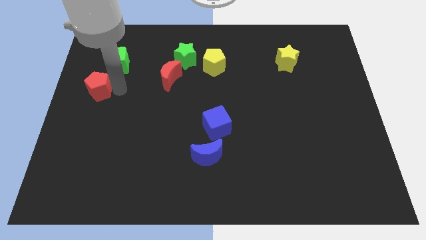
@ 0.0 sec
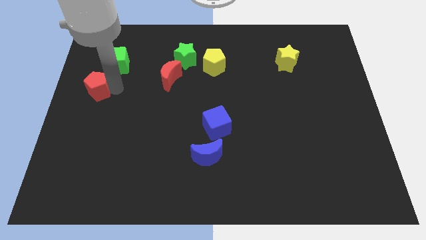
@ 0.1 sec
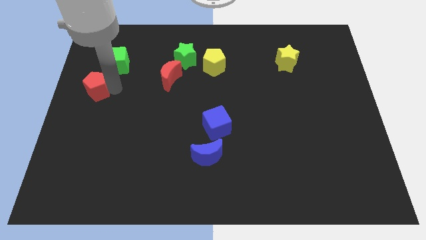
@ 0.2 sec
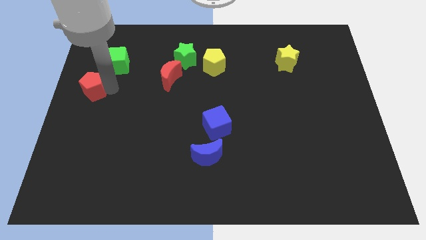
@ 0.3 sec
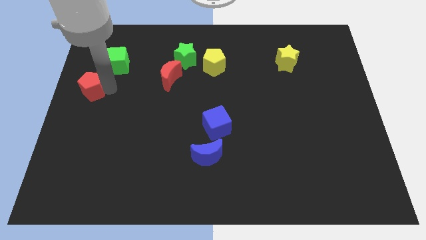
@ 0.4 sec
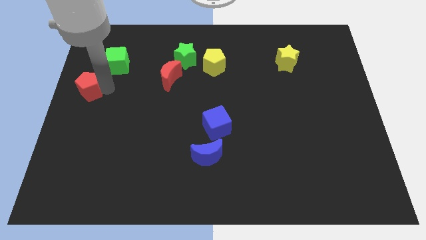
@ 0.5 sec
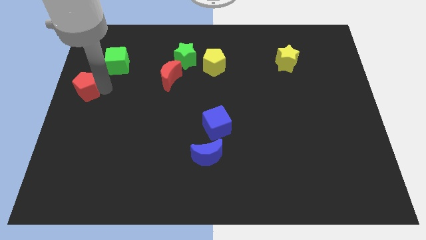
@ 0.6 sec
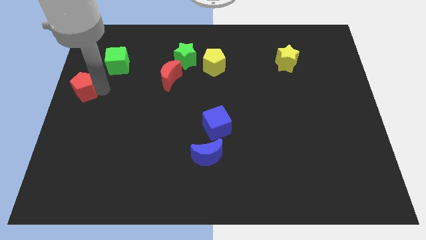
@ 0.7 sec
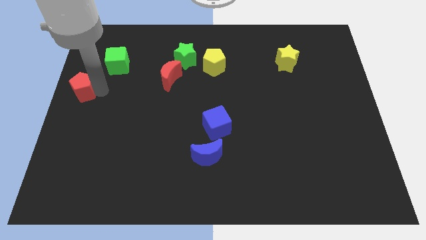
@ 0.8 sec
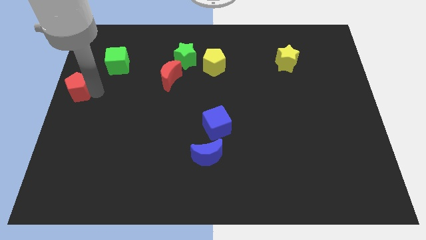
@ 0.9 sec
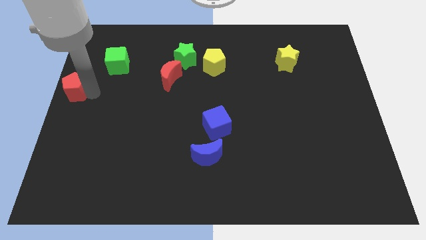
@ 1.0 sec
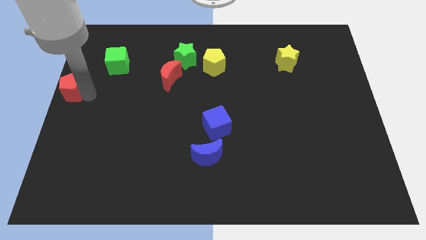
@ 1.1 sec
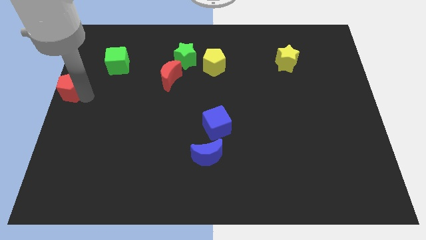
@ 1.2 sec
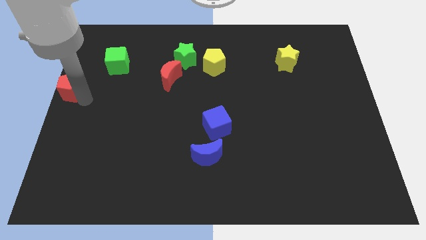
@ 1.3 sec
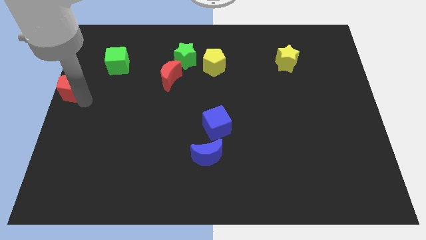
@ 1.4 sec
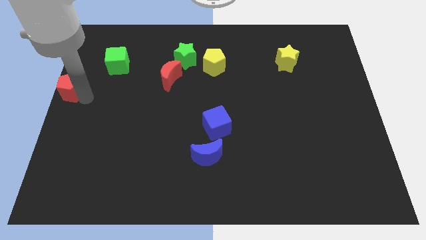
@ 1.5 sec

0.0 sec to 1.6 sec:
move the red pentagon towards the left

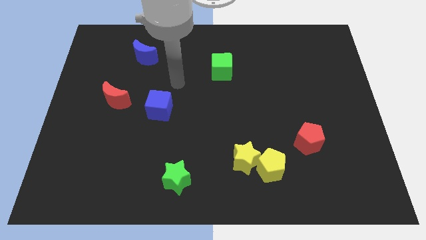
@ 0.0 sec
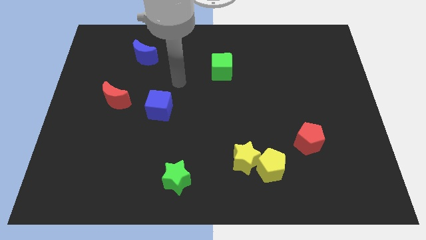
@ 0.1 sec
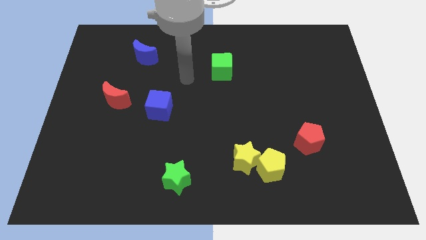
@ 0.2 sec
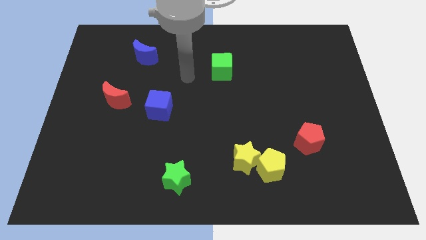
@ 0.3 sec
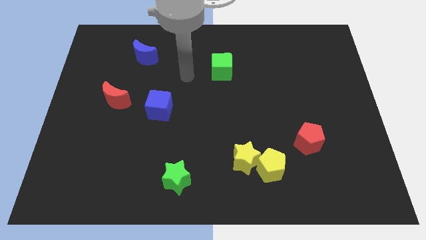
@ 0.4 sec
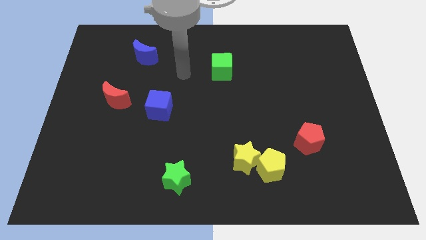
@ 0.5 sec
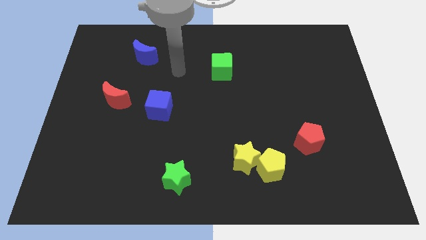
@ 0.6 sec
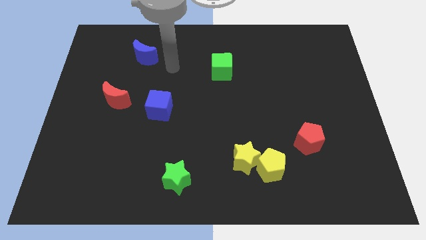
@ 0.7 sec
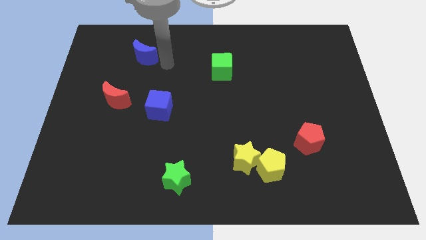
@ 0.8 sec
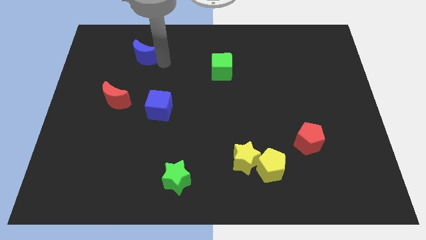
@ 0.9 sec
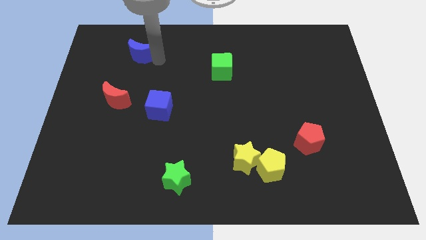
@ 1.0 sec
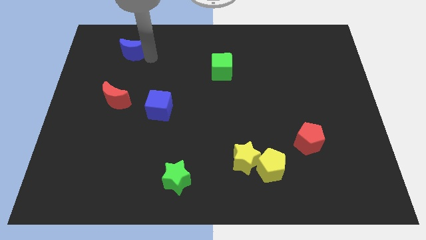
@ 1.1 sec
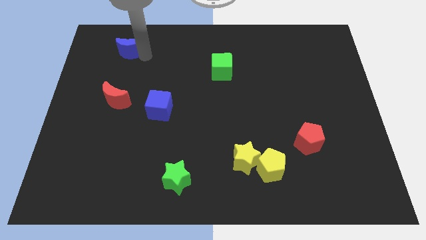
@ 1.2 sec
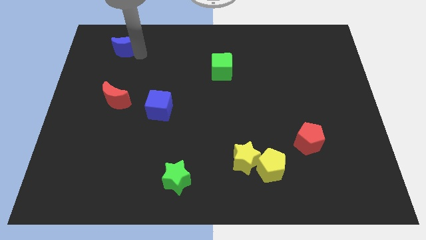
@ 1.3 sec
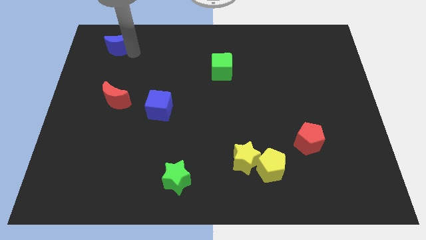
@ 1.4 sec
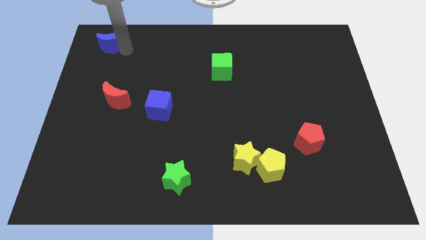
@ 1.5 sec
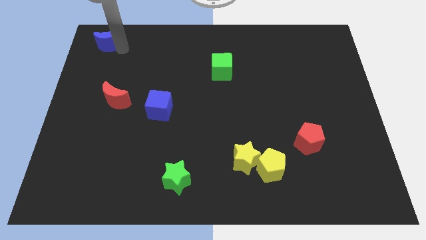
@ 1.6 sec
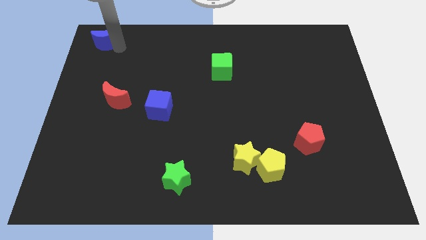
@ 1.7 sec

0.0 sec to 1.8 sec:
push the blue crescent to the top left corner of the board

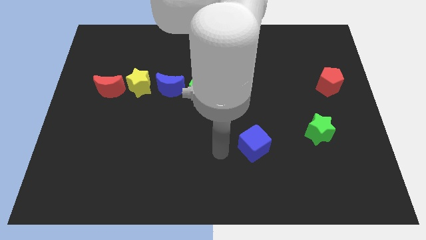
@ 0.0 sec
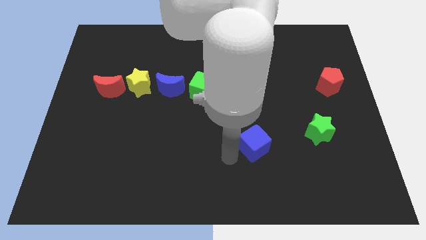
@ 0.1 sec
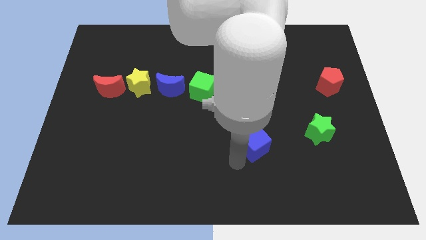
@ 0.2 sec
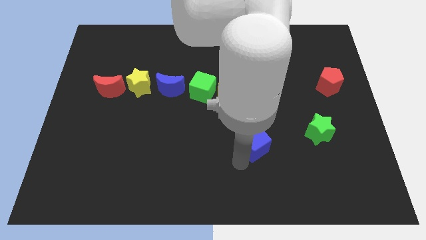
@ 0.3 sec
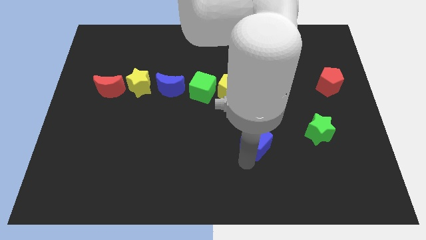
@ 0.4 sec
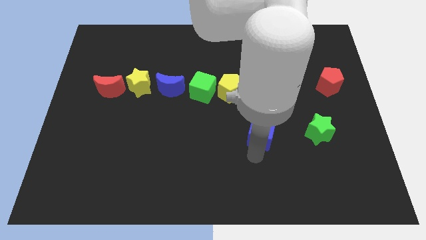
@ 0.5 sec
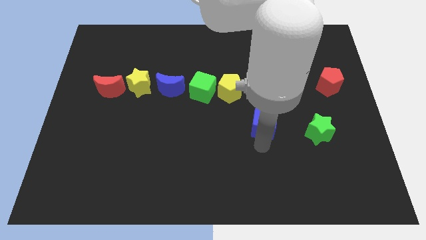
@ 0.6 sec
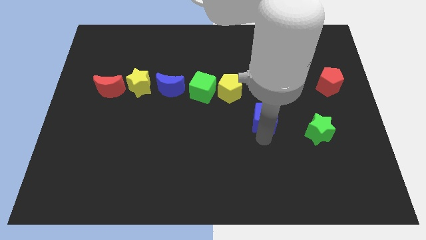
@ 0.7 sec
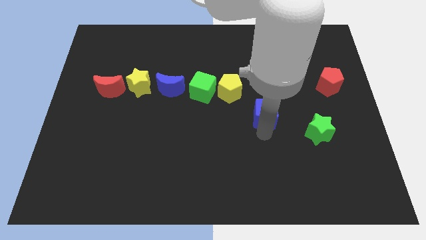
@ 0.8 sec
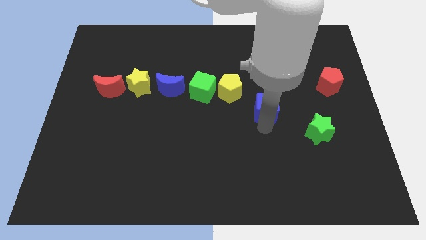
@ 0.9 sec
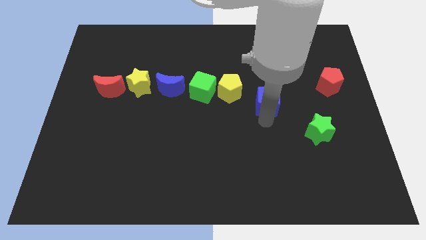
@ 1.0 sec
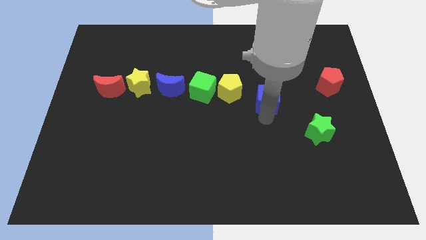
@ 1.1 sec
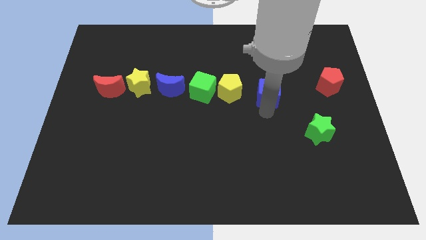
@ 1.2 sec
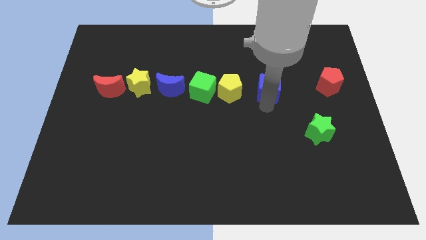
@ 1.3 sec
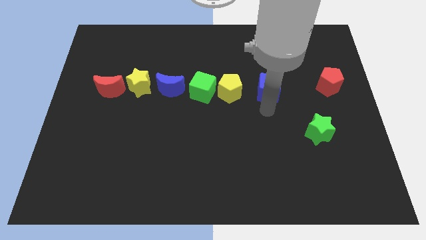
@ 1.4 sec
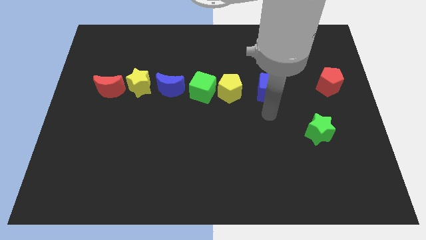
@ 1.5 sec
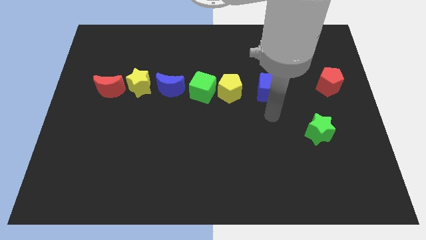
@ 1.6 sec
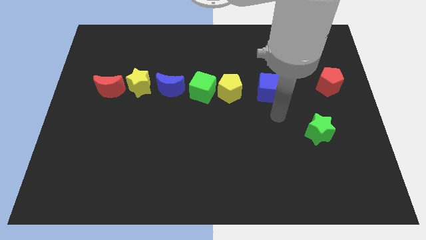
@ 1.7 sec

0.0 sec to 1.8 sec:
place the blue cube to the right of the yellow pentagon

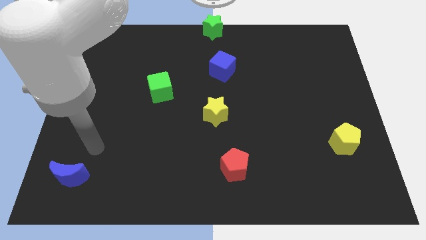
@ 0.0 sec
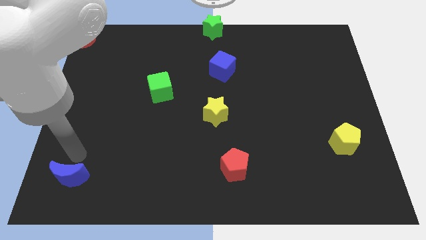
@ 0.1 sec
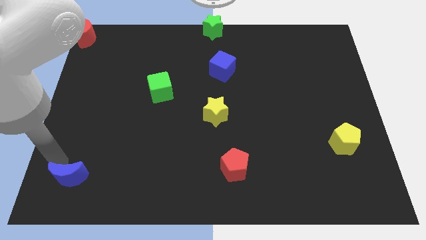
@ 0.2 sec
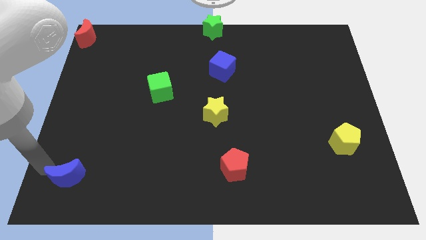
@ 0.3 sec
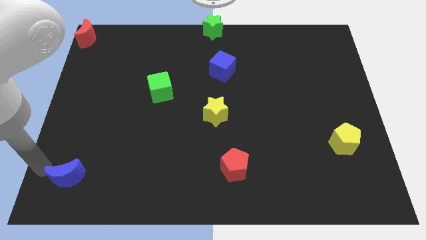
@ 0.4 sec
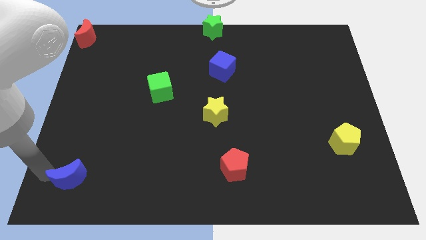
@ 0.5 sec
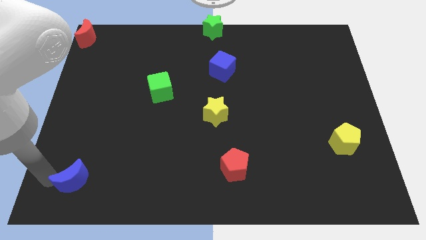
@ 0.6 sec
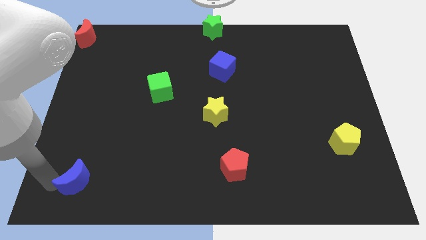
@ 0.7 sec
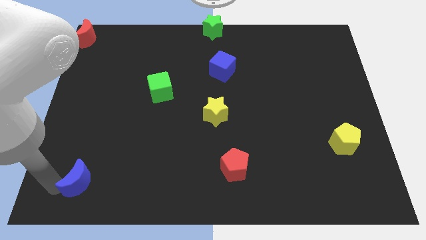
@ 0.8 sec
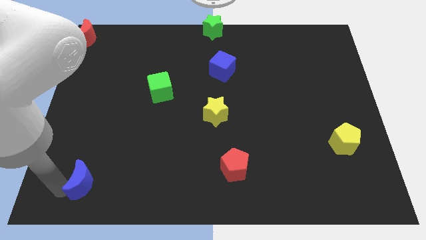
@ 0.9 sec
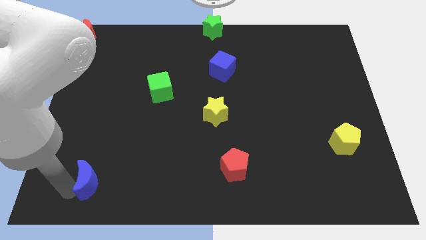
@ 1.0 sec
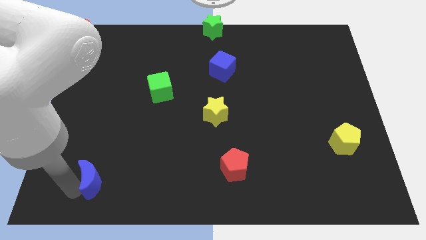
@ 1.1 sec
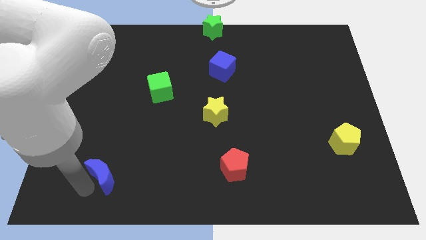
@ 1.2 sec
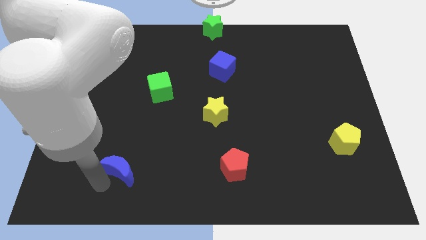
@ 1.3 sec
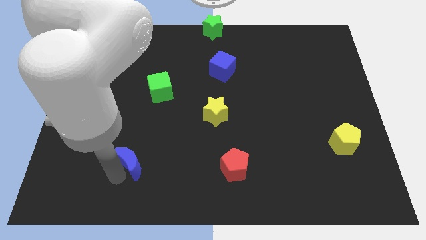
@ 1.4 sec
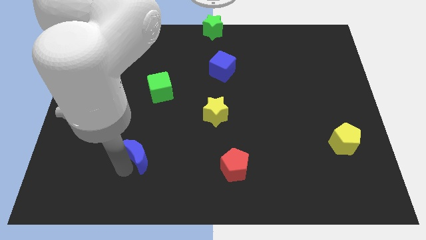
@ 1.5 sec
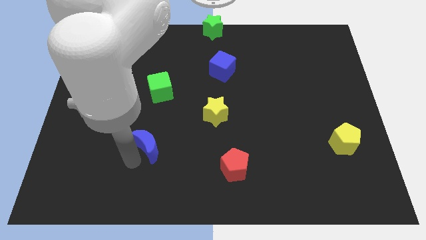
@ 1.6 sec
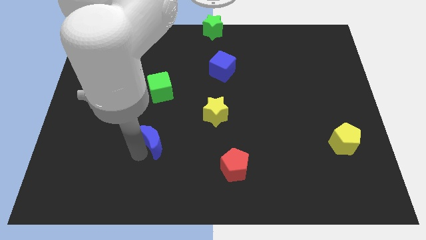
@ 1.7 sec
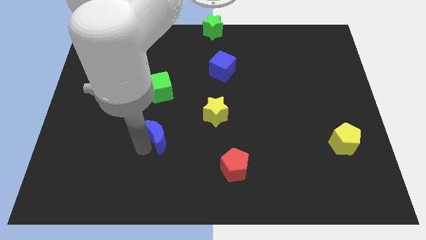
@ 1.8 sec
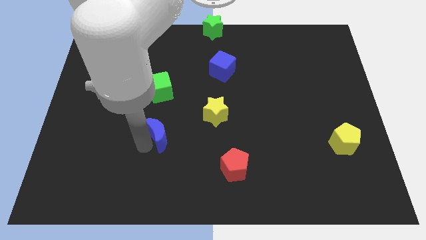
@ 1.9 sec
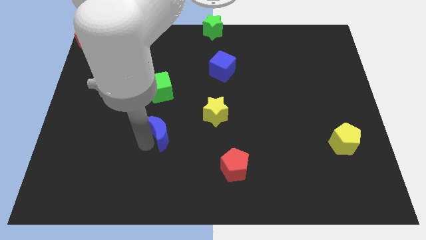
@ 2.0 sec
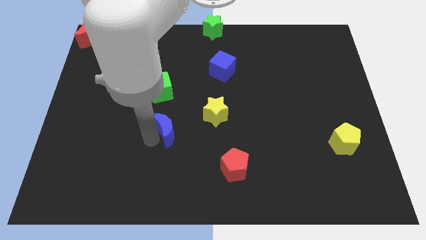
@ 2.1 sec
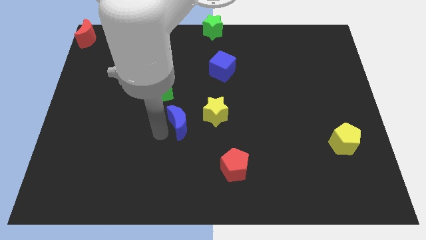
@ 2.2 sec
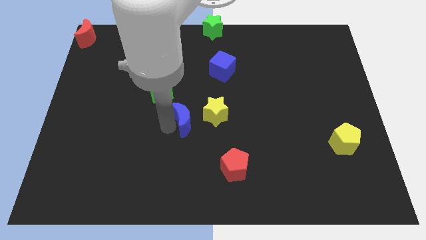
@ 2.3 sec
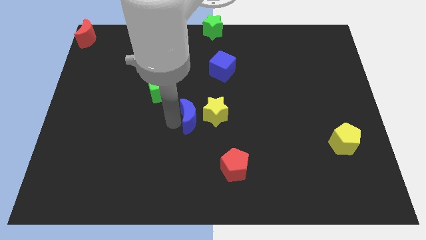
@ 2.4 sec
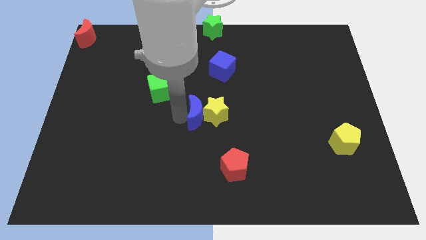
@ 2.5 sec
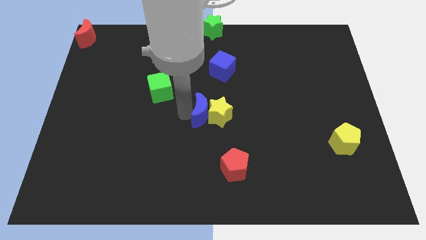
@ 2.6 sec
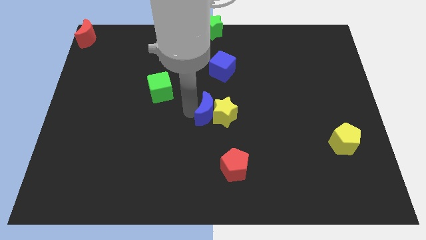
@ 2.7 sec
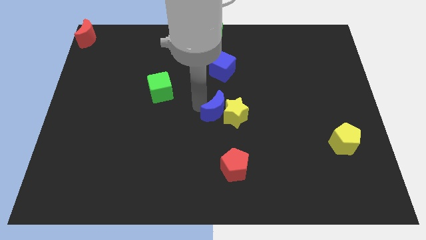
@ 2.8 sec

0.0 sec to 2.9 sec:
place blue moon to the center of the board

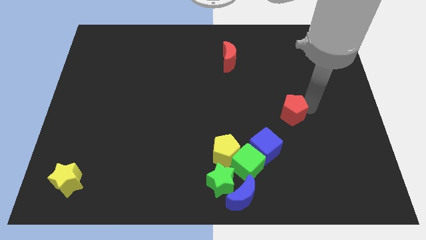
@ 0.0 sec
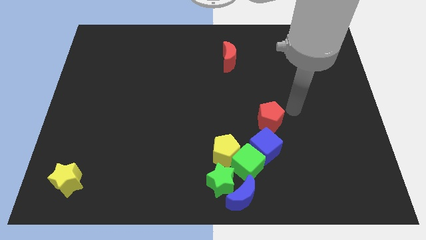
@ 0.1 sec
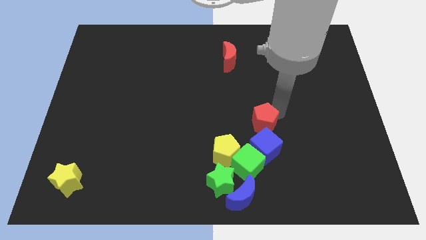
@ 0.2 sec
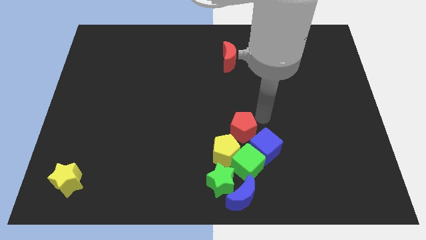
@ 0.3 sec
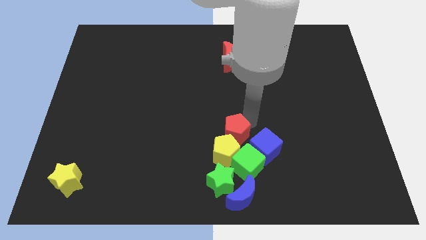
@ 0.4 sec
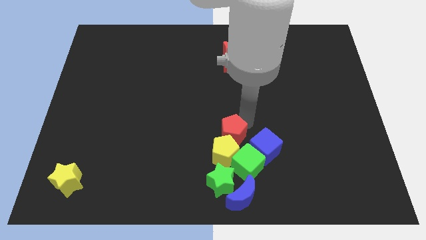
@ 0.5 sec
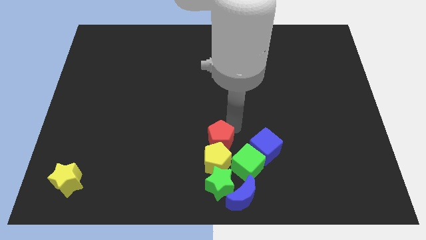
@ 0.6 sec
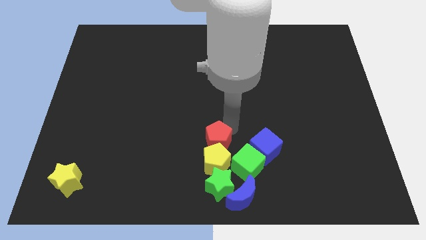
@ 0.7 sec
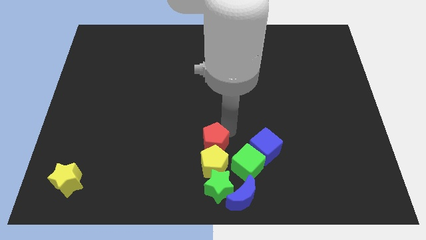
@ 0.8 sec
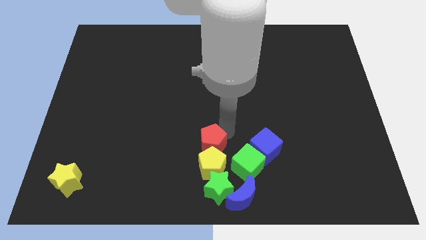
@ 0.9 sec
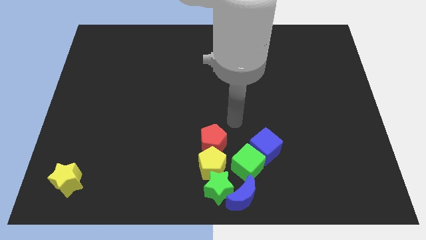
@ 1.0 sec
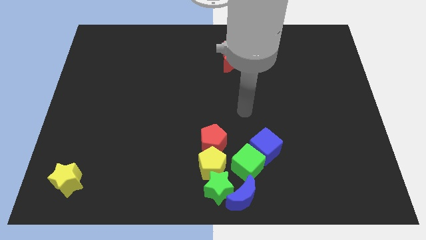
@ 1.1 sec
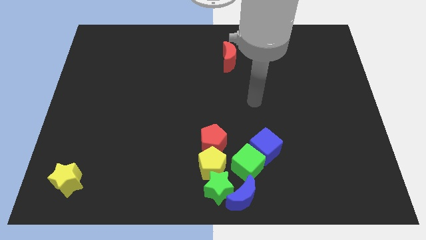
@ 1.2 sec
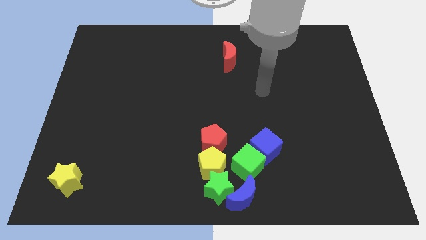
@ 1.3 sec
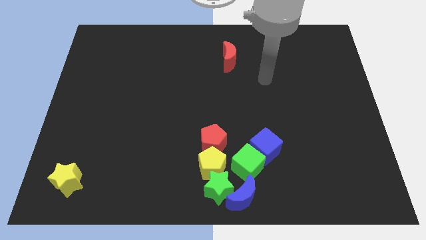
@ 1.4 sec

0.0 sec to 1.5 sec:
push red pentagon into the yellow pentagon
